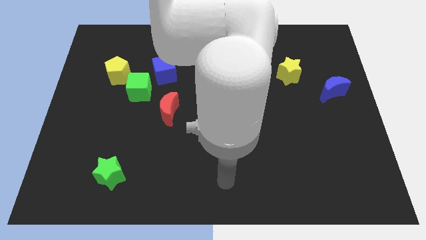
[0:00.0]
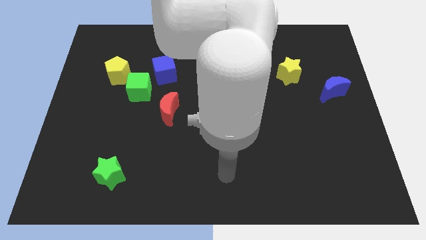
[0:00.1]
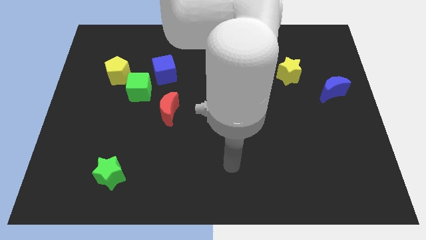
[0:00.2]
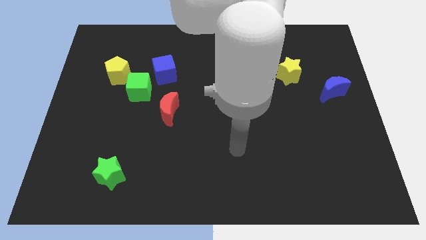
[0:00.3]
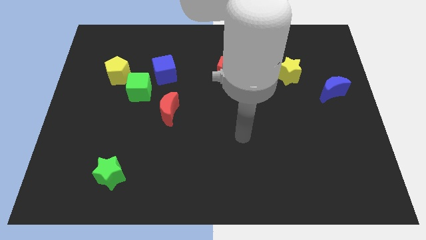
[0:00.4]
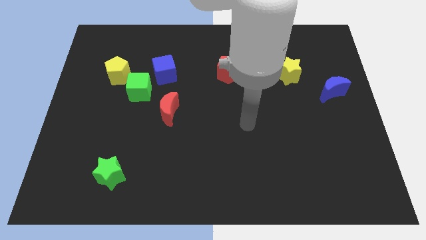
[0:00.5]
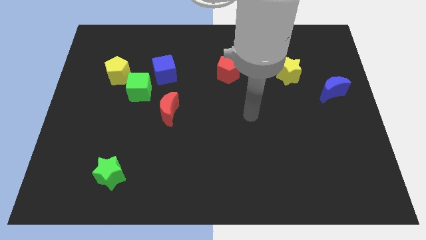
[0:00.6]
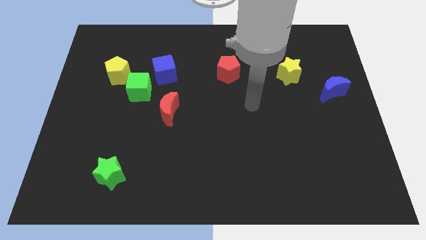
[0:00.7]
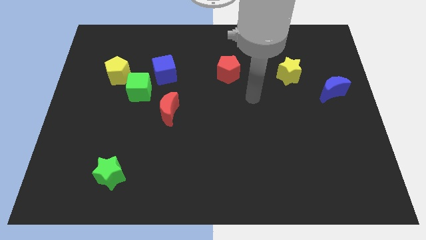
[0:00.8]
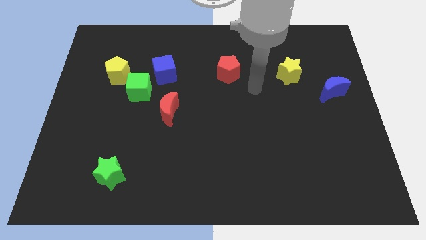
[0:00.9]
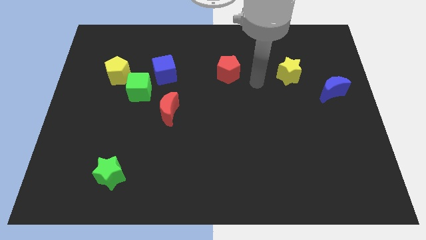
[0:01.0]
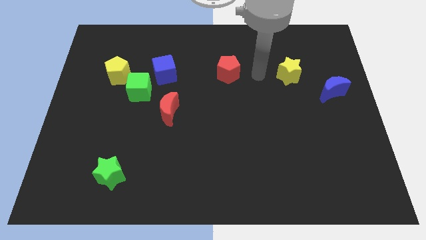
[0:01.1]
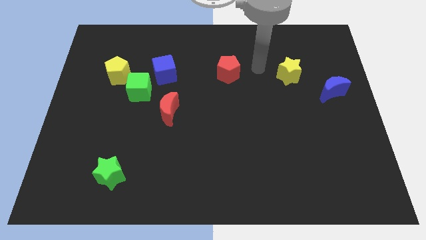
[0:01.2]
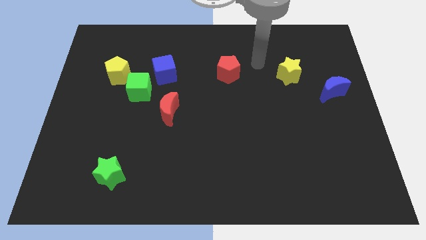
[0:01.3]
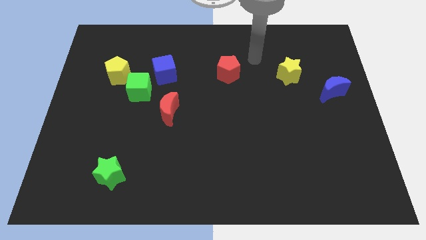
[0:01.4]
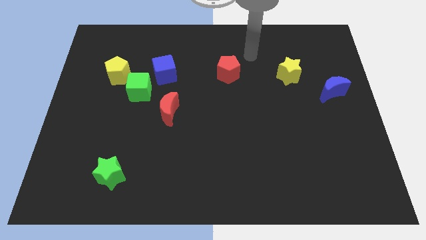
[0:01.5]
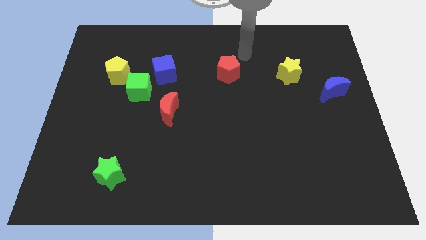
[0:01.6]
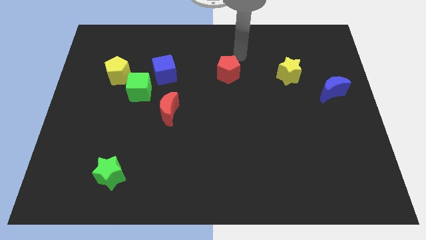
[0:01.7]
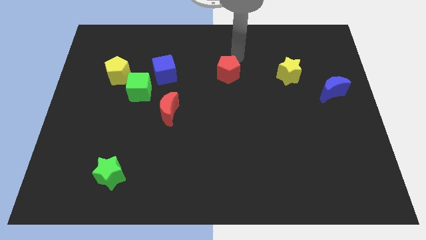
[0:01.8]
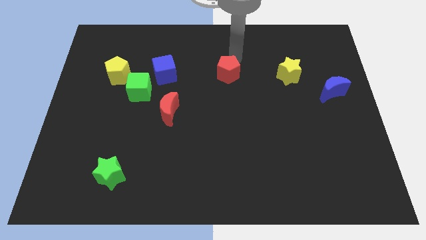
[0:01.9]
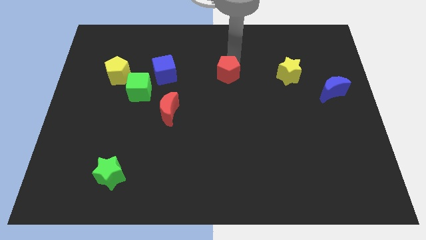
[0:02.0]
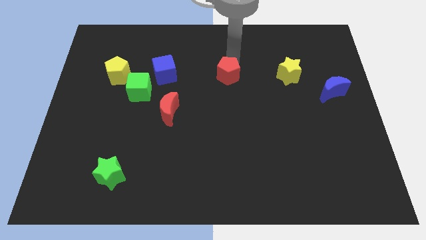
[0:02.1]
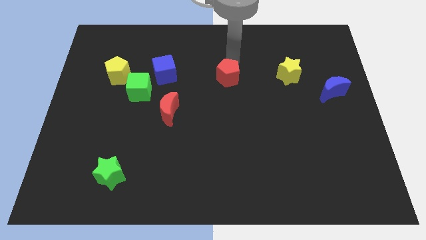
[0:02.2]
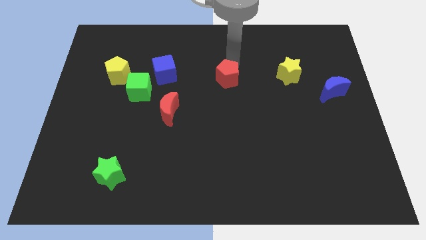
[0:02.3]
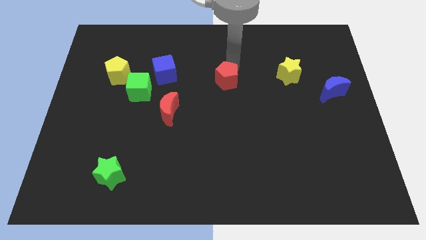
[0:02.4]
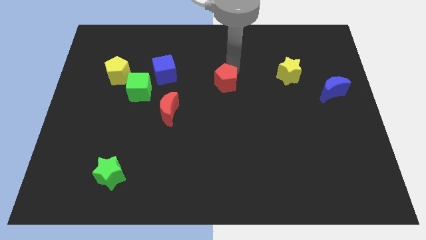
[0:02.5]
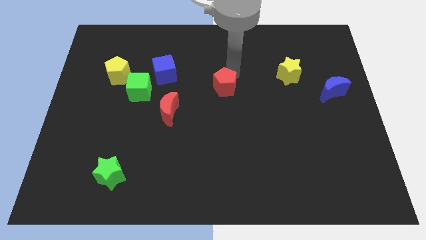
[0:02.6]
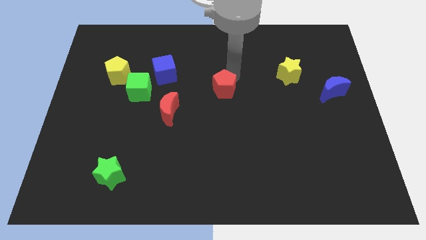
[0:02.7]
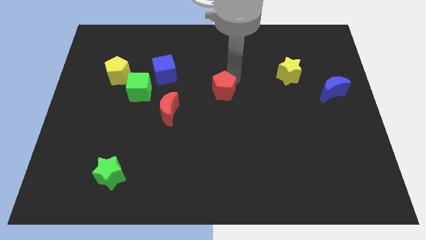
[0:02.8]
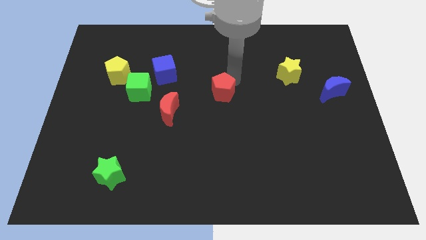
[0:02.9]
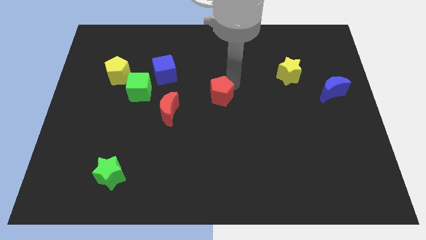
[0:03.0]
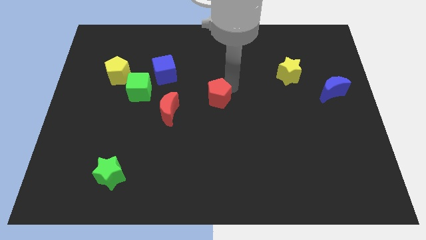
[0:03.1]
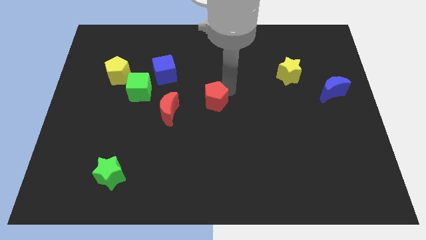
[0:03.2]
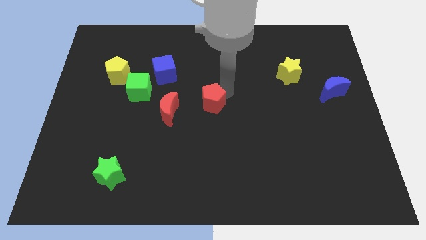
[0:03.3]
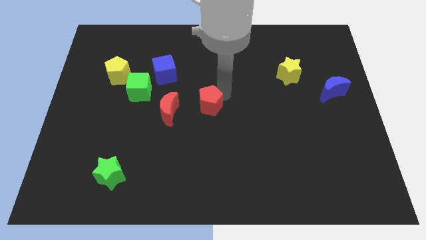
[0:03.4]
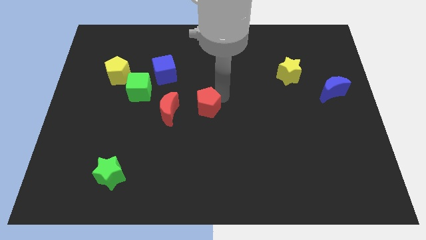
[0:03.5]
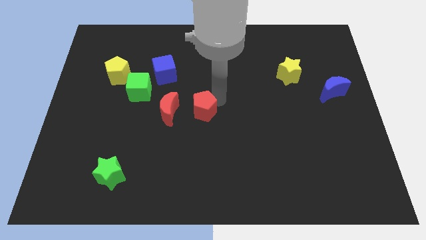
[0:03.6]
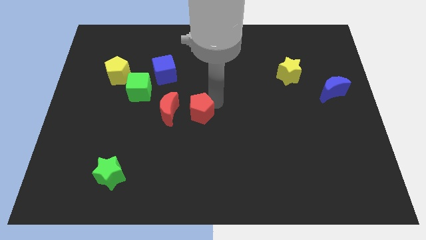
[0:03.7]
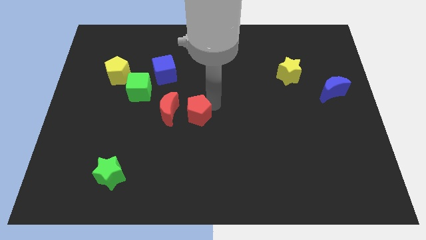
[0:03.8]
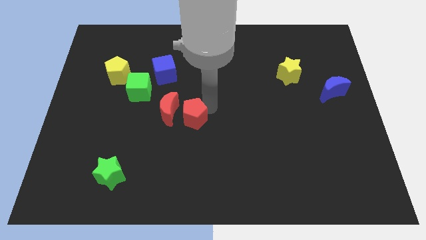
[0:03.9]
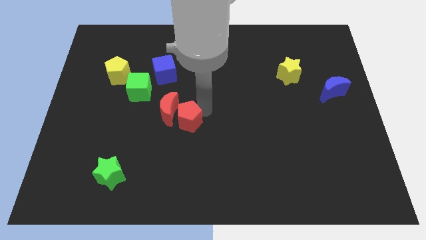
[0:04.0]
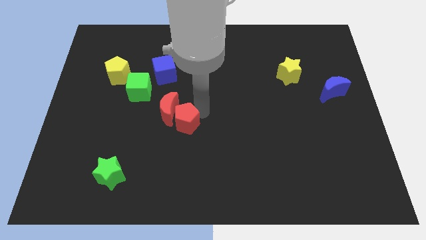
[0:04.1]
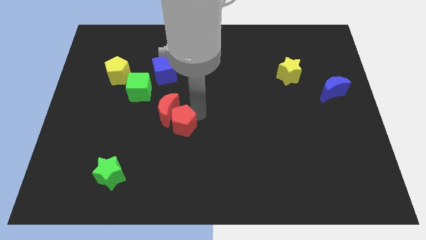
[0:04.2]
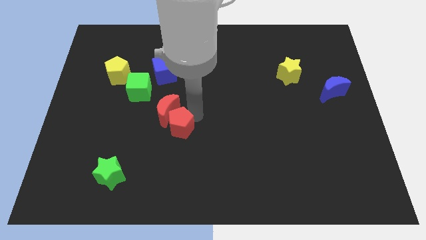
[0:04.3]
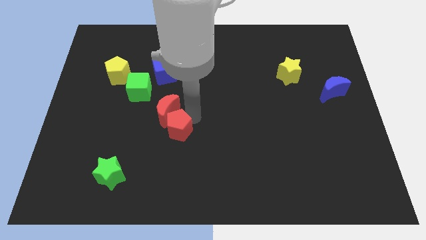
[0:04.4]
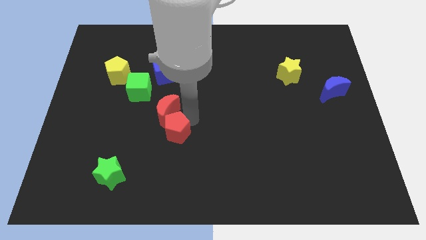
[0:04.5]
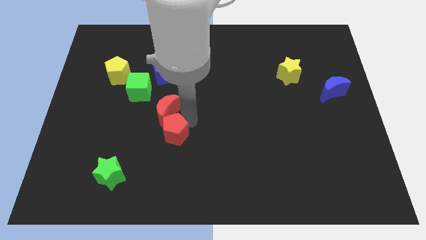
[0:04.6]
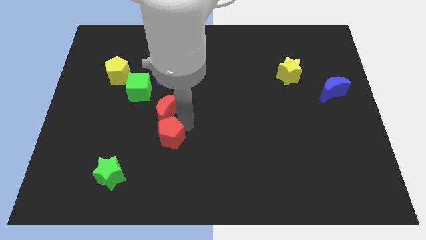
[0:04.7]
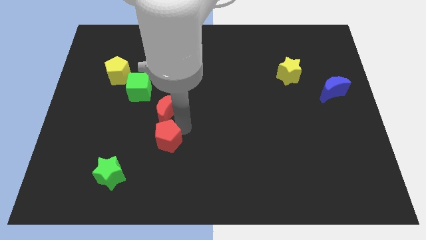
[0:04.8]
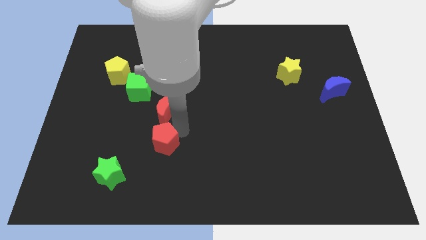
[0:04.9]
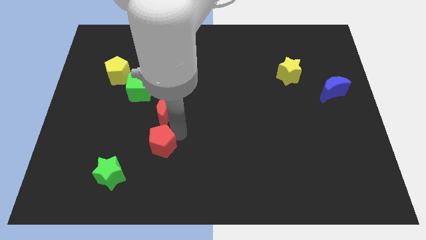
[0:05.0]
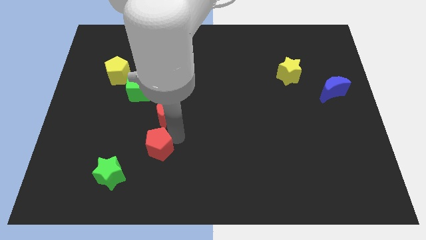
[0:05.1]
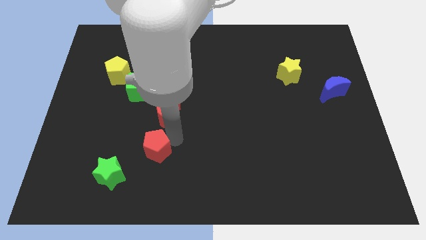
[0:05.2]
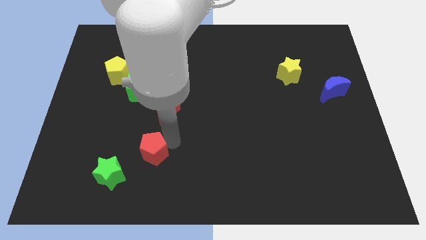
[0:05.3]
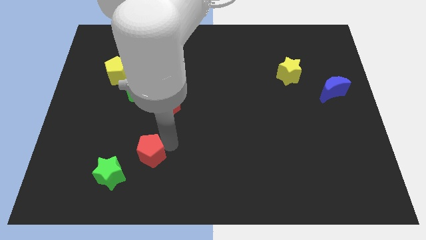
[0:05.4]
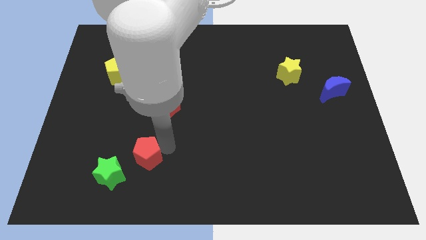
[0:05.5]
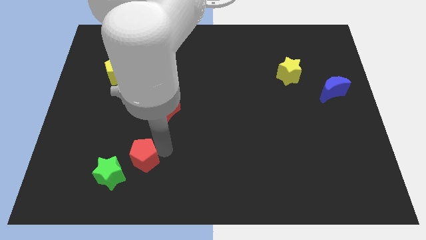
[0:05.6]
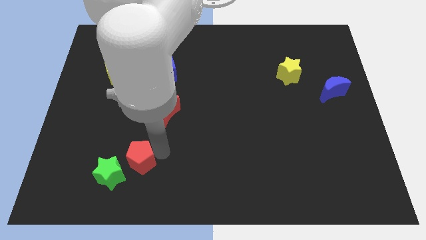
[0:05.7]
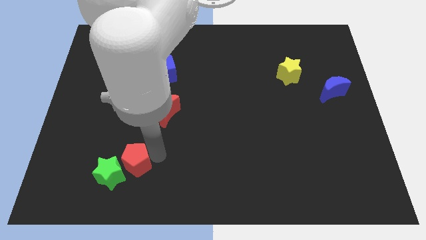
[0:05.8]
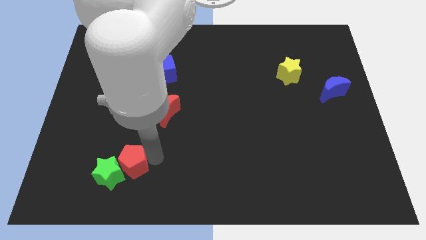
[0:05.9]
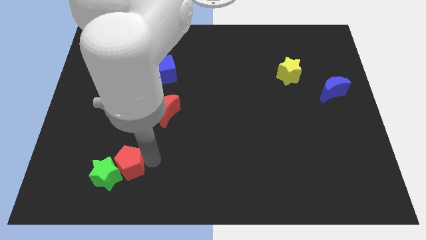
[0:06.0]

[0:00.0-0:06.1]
push the red pentagon close to the green star

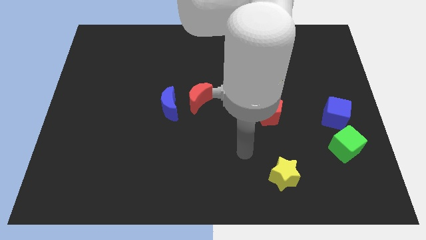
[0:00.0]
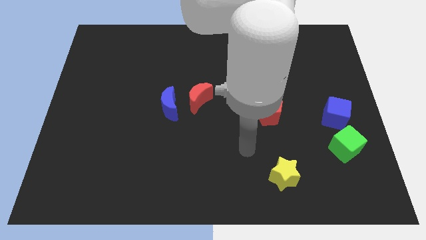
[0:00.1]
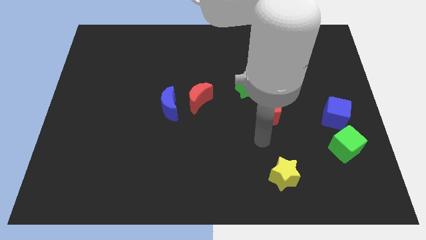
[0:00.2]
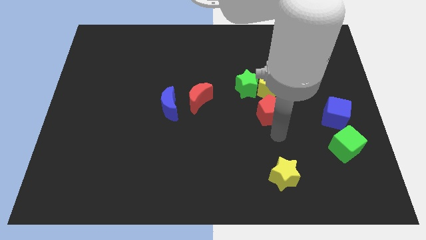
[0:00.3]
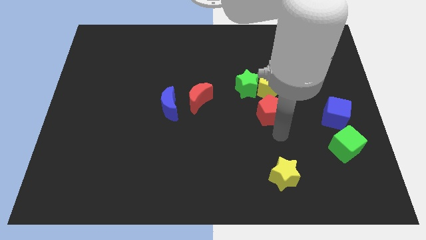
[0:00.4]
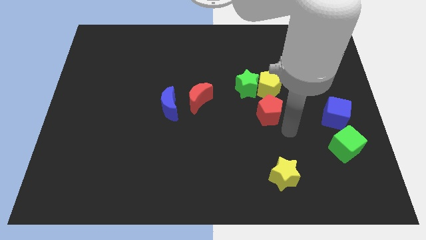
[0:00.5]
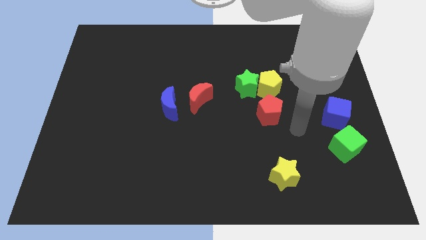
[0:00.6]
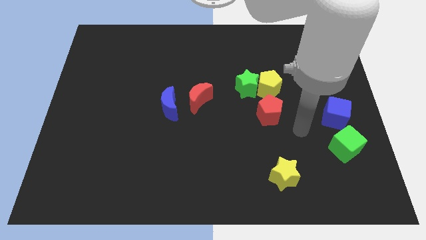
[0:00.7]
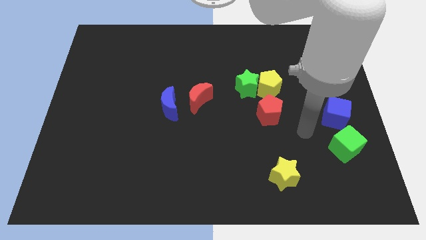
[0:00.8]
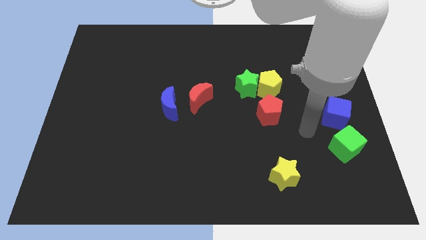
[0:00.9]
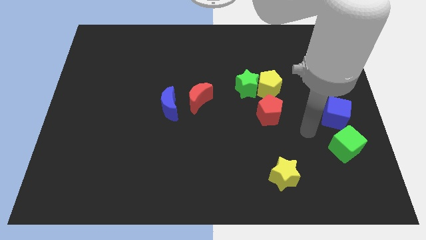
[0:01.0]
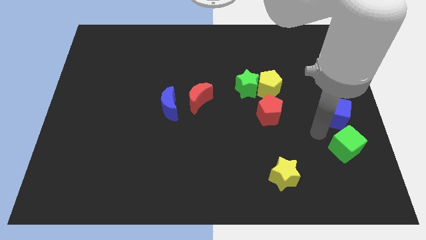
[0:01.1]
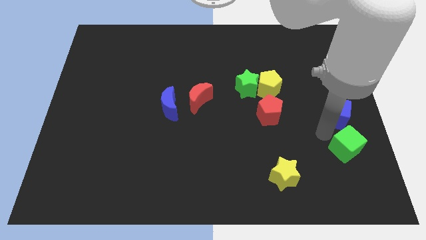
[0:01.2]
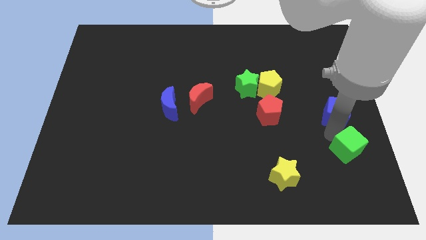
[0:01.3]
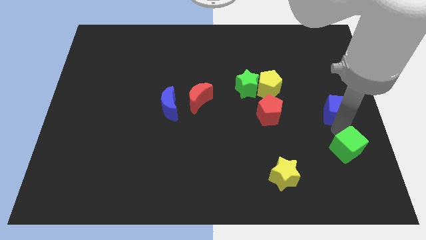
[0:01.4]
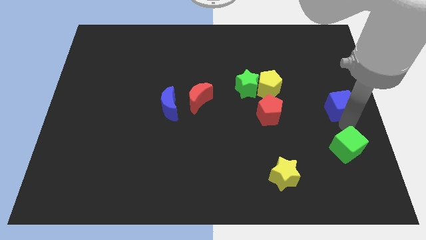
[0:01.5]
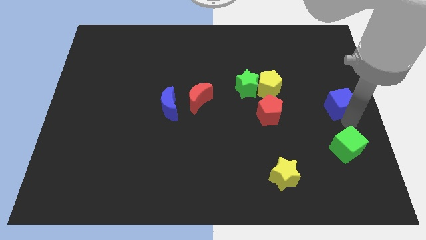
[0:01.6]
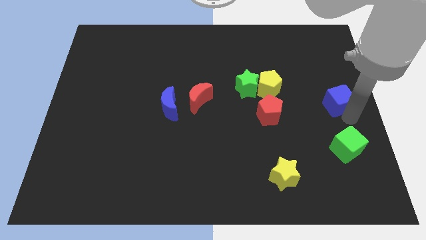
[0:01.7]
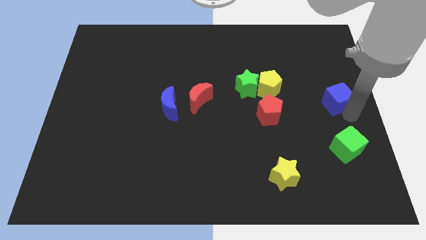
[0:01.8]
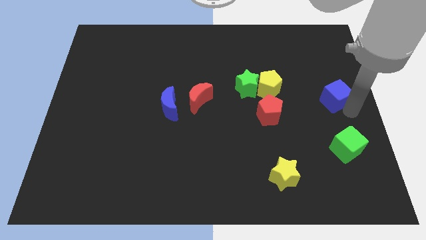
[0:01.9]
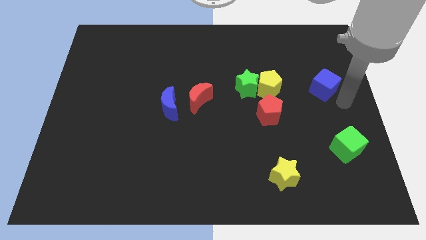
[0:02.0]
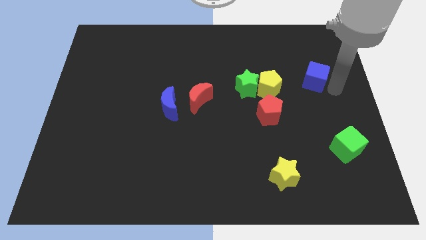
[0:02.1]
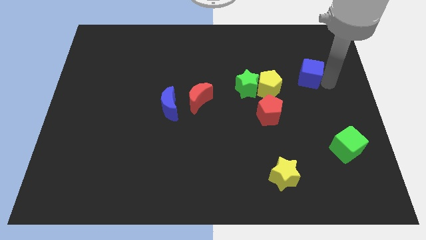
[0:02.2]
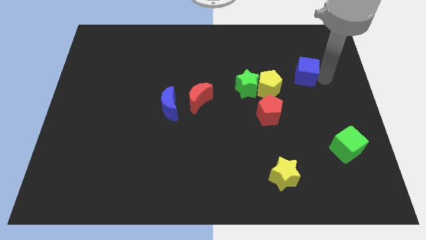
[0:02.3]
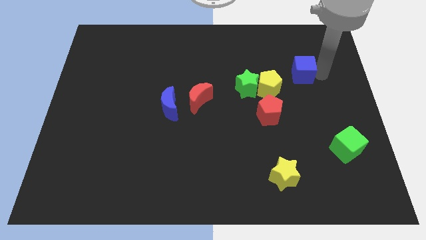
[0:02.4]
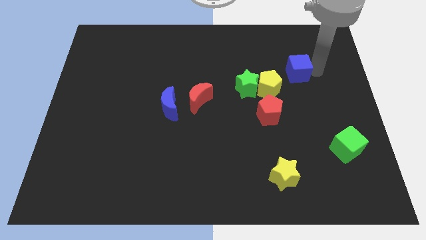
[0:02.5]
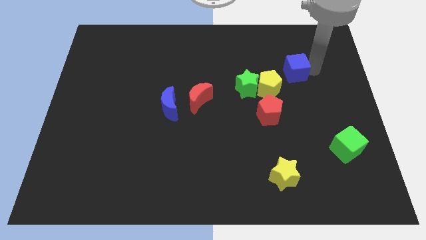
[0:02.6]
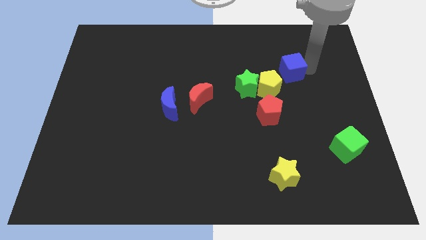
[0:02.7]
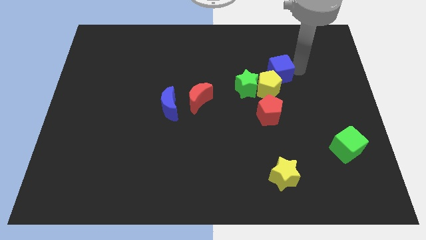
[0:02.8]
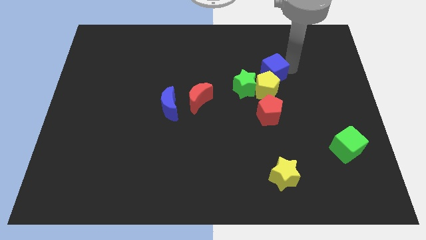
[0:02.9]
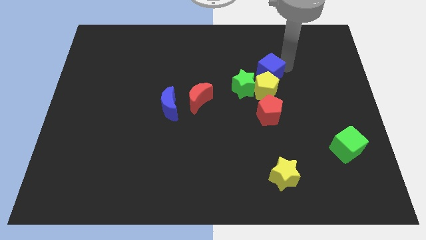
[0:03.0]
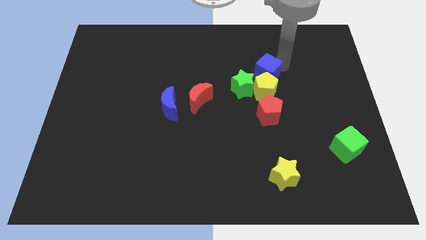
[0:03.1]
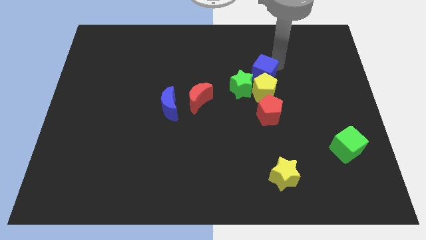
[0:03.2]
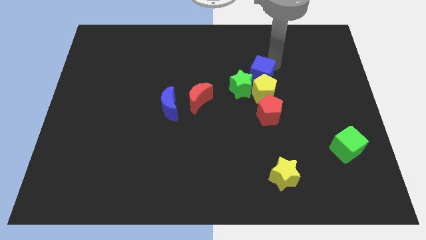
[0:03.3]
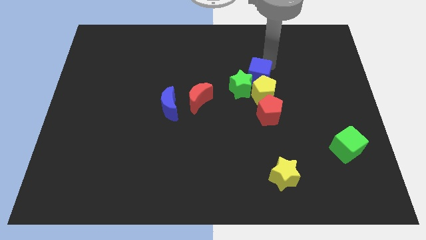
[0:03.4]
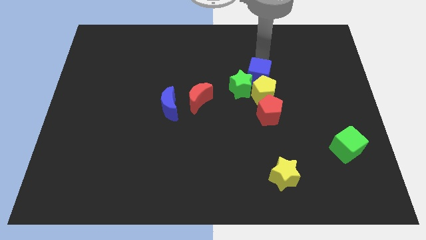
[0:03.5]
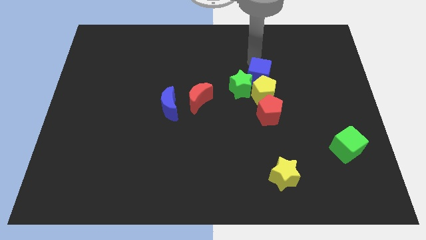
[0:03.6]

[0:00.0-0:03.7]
put the blue cube to the green star
